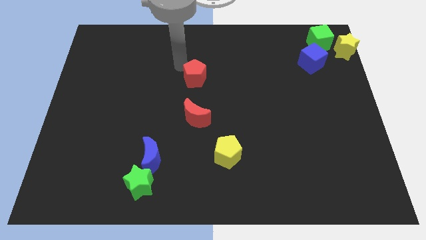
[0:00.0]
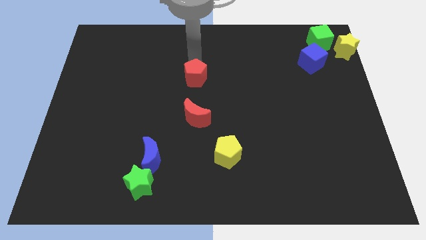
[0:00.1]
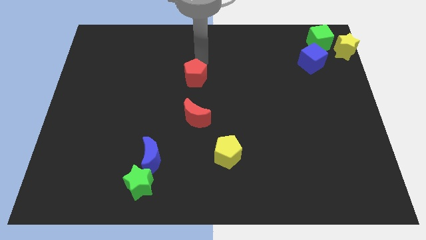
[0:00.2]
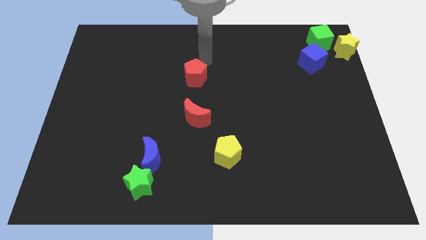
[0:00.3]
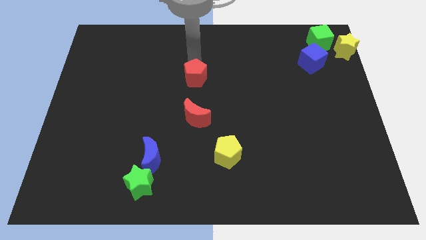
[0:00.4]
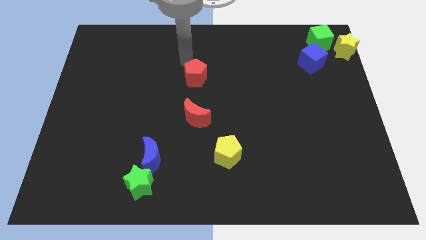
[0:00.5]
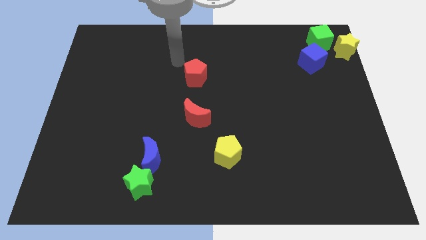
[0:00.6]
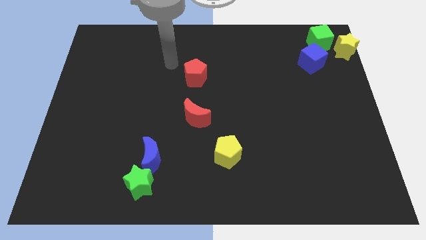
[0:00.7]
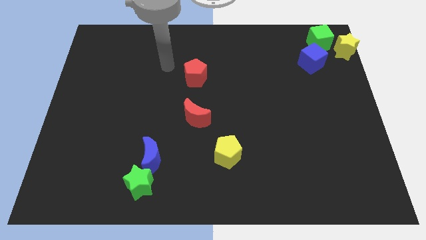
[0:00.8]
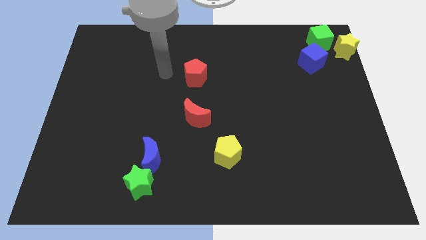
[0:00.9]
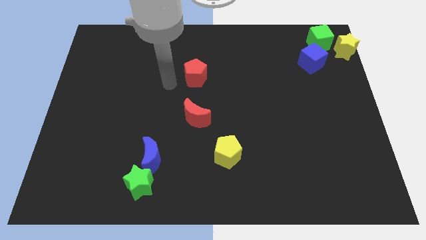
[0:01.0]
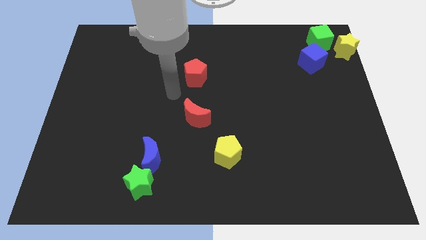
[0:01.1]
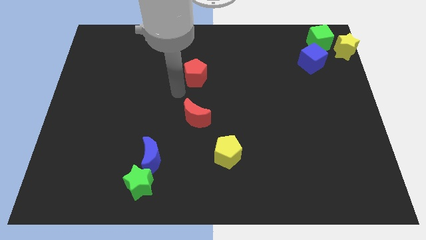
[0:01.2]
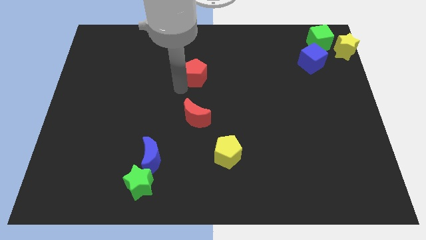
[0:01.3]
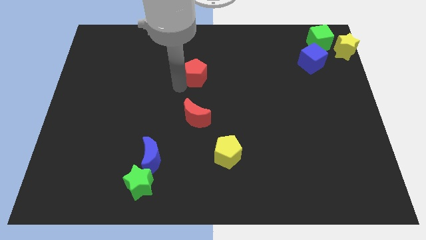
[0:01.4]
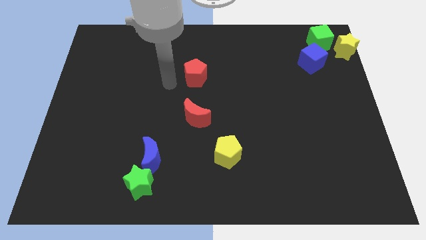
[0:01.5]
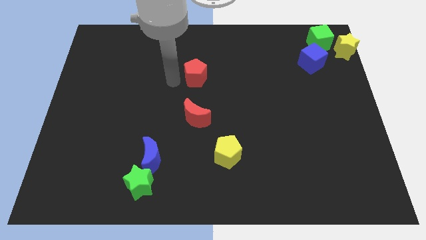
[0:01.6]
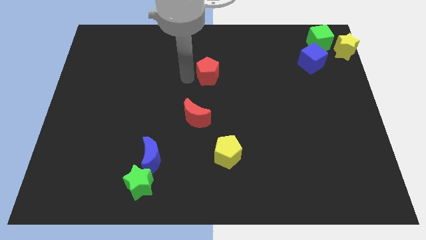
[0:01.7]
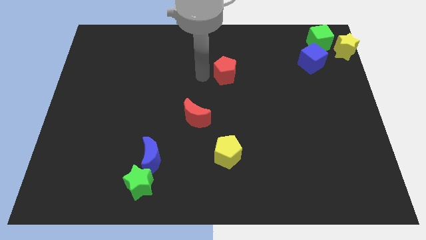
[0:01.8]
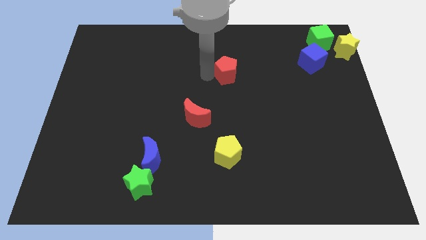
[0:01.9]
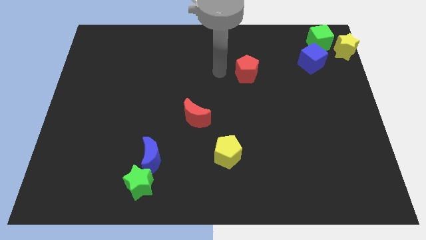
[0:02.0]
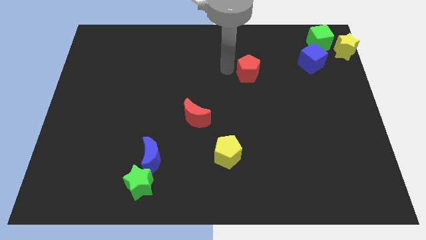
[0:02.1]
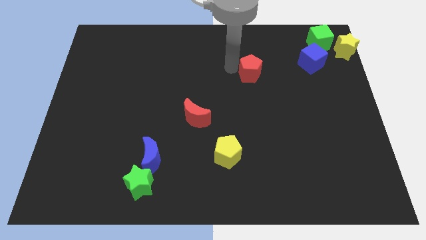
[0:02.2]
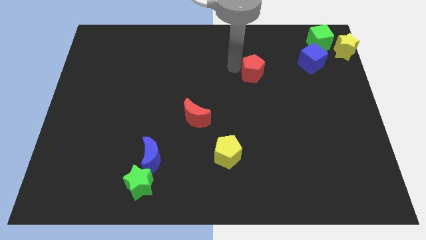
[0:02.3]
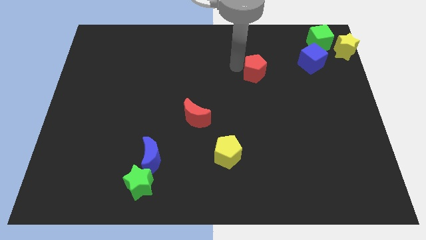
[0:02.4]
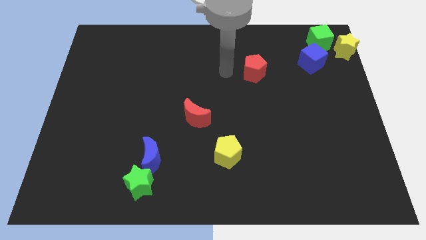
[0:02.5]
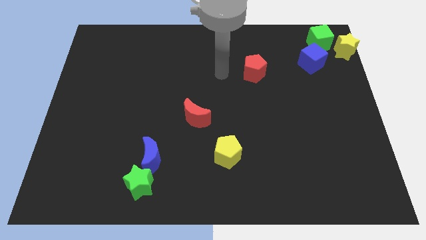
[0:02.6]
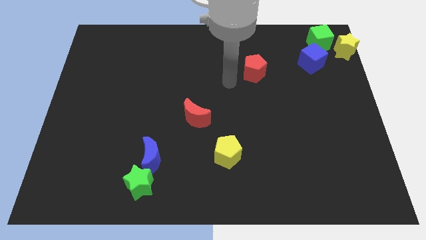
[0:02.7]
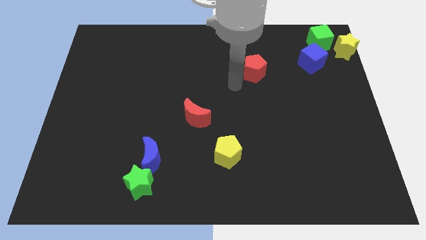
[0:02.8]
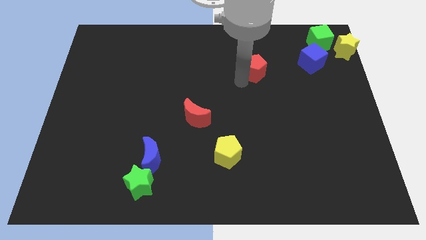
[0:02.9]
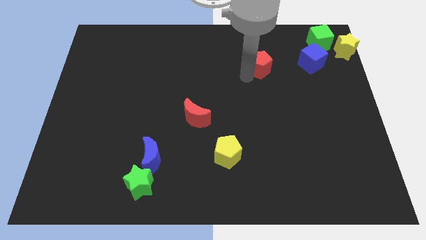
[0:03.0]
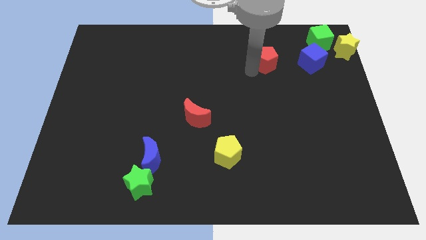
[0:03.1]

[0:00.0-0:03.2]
move the red pentagon left side of the blue cube

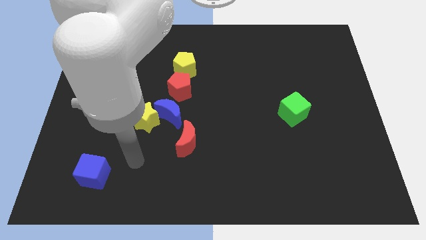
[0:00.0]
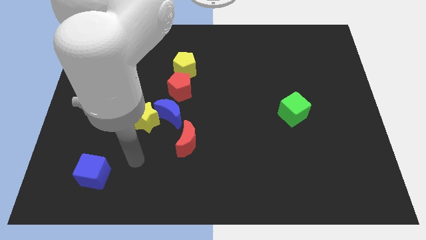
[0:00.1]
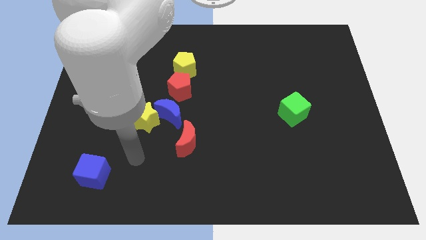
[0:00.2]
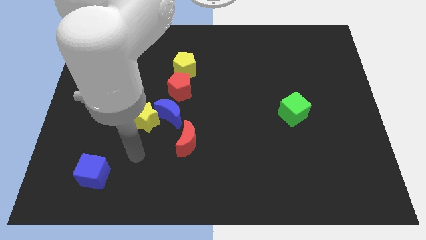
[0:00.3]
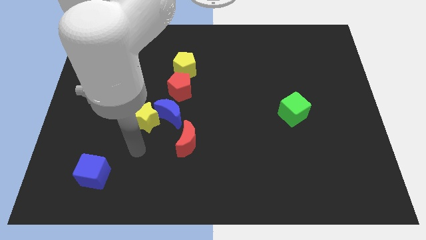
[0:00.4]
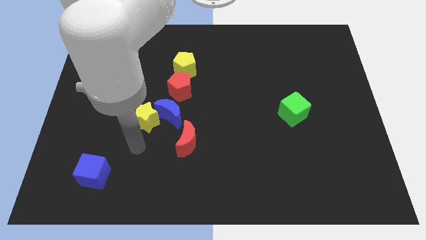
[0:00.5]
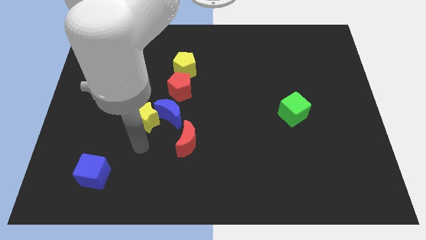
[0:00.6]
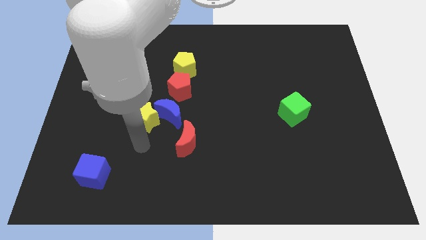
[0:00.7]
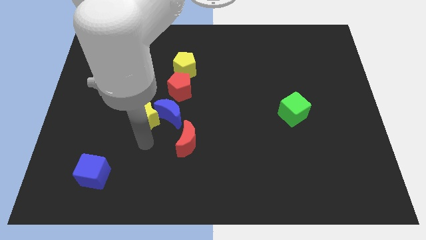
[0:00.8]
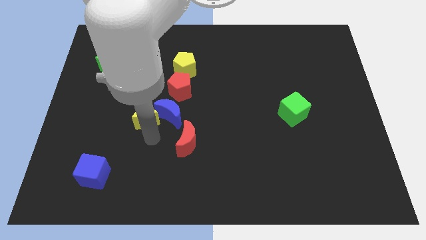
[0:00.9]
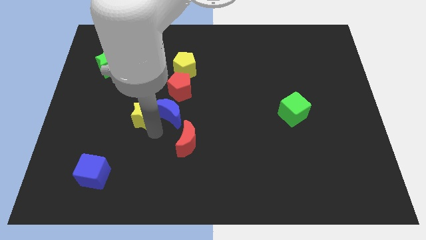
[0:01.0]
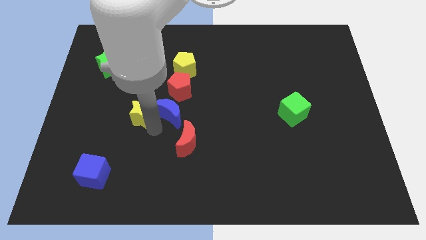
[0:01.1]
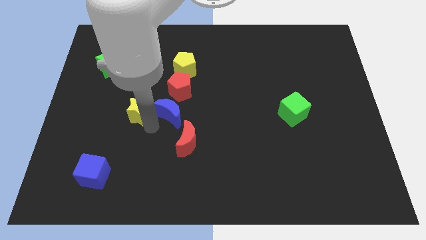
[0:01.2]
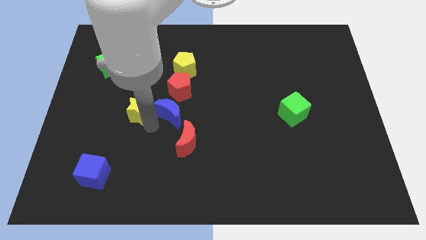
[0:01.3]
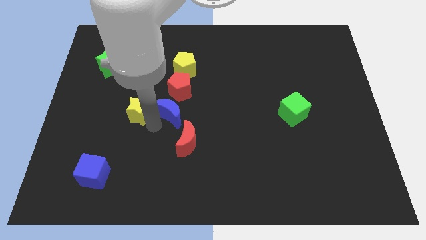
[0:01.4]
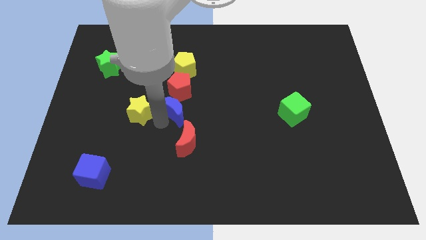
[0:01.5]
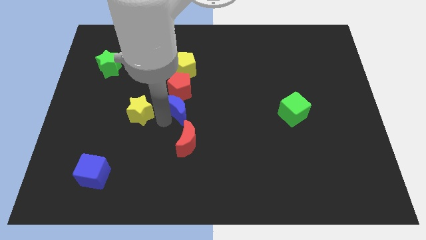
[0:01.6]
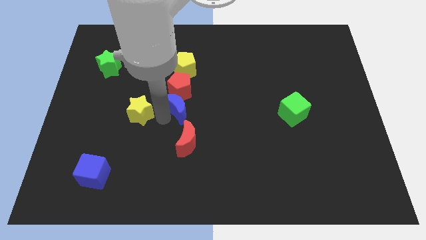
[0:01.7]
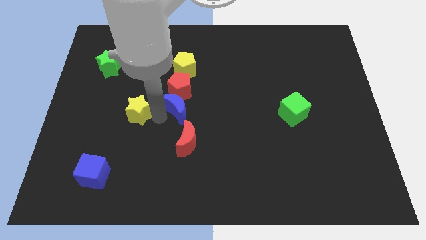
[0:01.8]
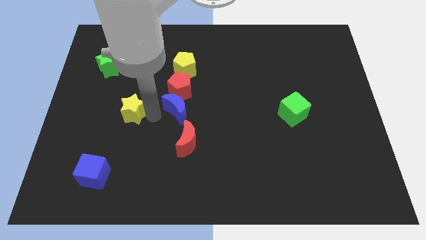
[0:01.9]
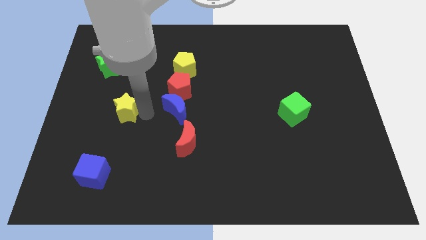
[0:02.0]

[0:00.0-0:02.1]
separate the yellow star and blue moon

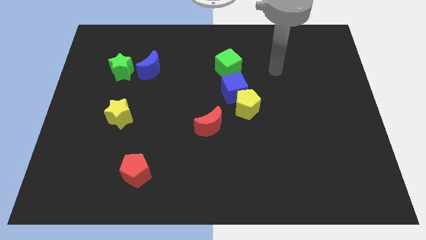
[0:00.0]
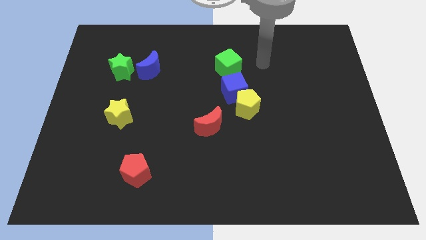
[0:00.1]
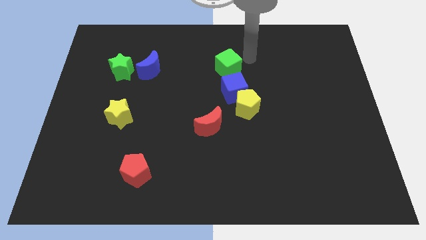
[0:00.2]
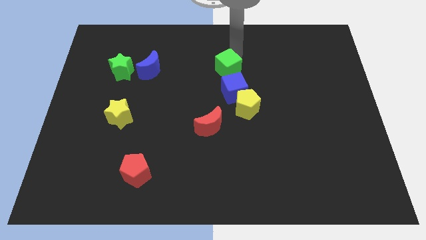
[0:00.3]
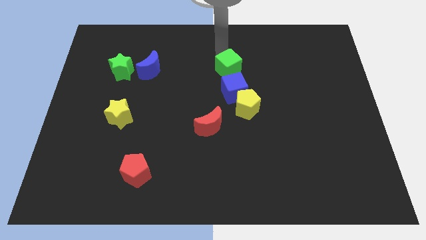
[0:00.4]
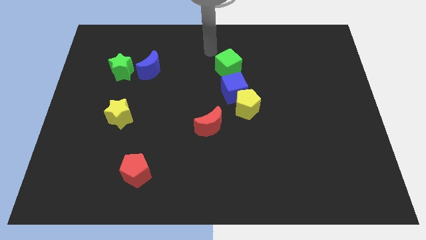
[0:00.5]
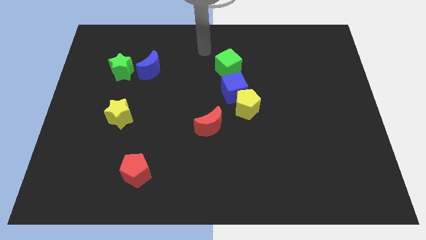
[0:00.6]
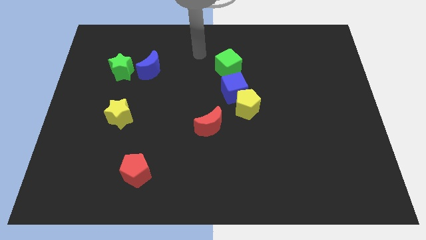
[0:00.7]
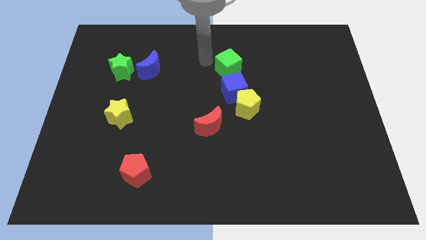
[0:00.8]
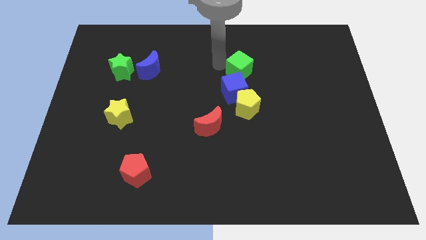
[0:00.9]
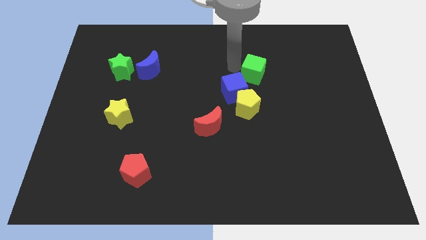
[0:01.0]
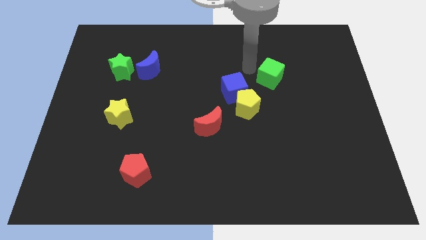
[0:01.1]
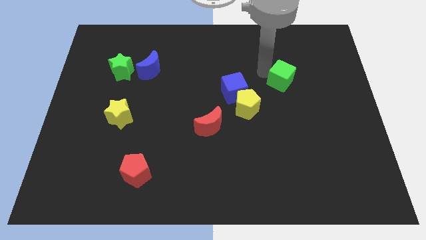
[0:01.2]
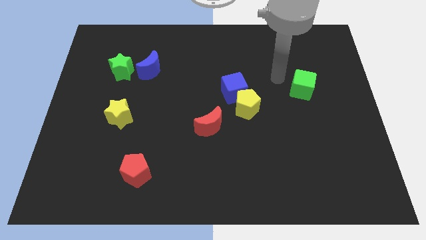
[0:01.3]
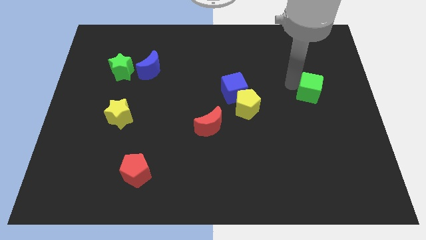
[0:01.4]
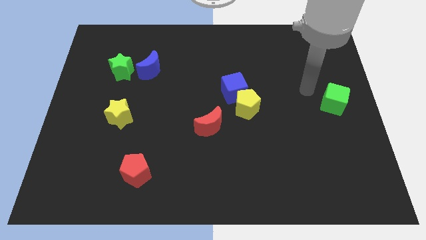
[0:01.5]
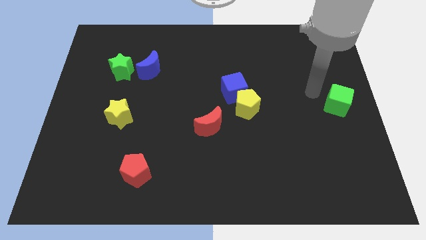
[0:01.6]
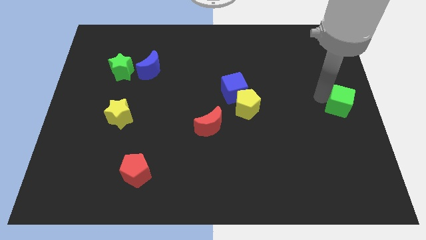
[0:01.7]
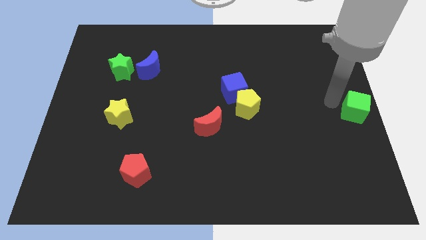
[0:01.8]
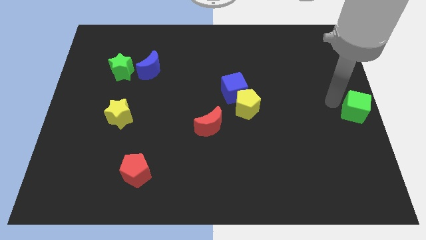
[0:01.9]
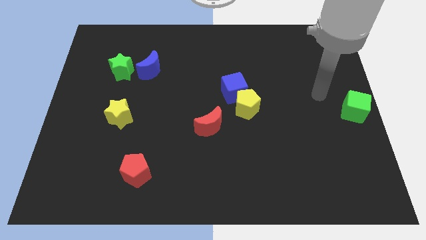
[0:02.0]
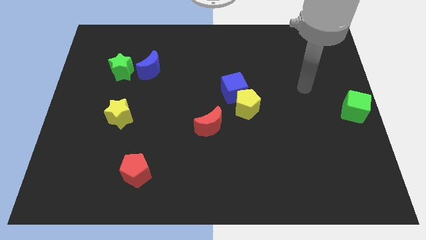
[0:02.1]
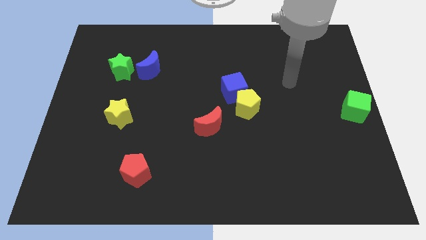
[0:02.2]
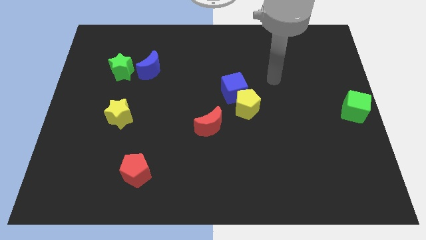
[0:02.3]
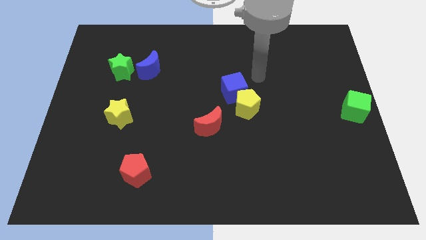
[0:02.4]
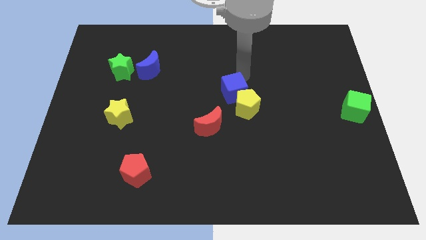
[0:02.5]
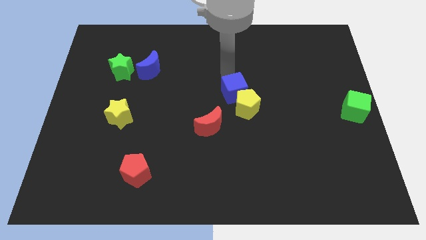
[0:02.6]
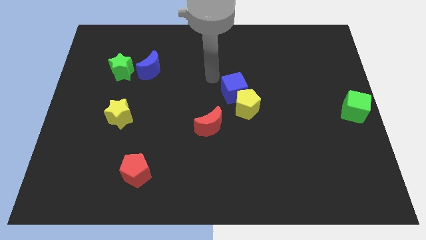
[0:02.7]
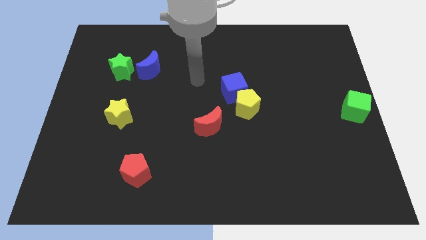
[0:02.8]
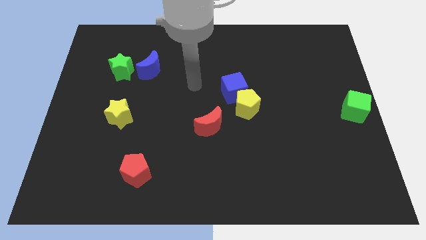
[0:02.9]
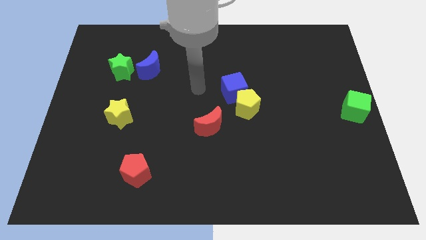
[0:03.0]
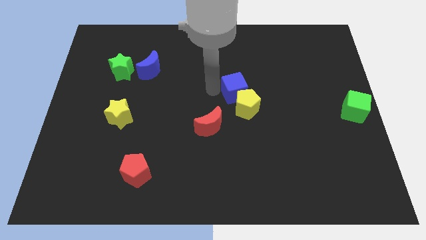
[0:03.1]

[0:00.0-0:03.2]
place your arm towards the top left of the blue cube

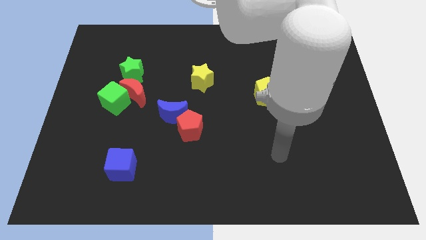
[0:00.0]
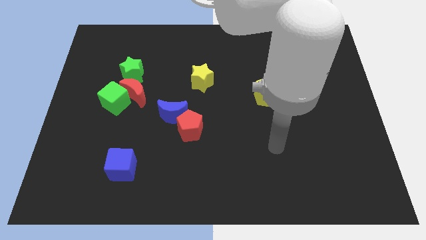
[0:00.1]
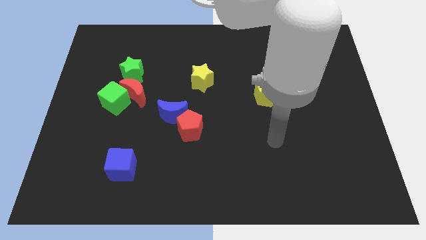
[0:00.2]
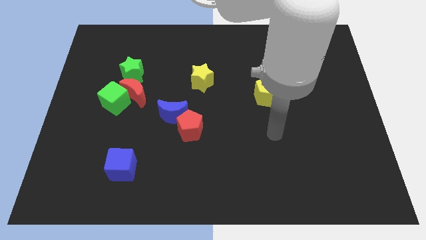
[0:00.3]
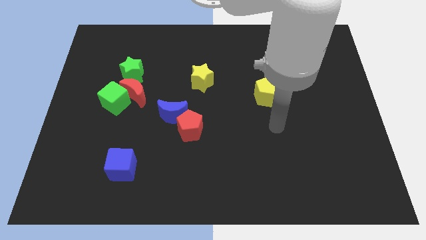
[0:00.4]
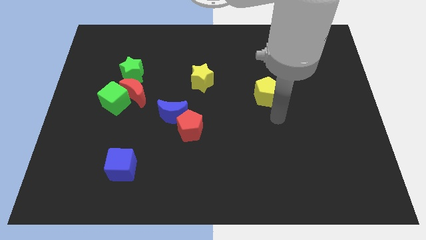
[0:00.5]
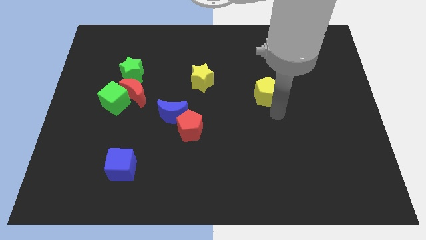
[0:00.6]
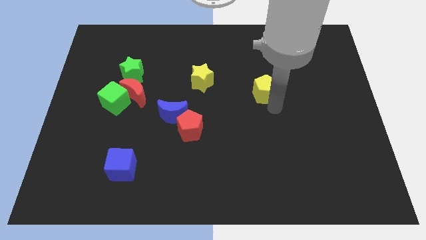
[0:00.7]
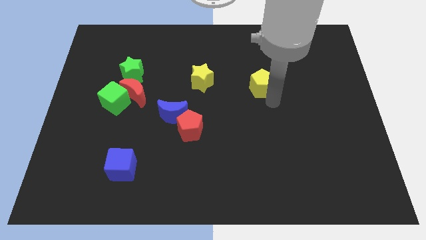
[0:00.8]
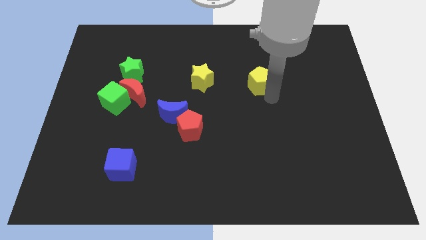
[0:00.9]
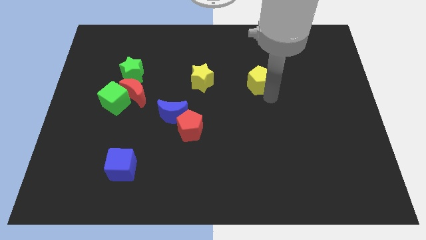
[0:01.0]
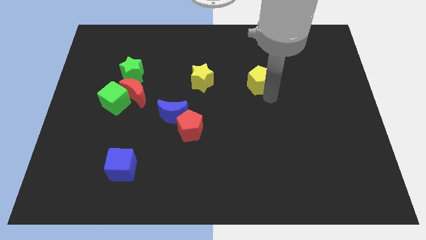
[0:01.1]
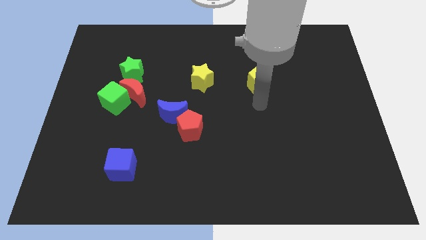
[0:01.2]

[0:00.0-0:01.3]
push the yellow pentagon slightly to the top
